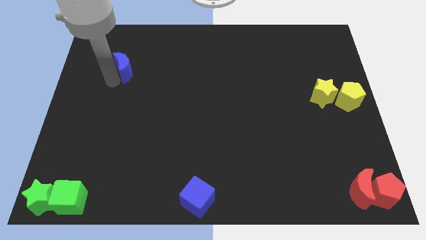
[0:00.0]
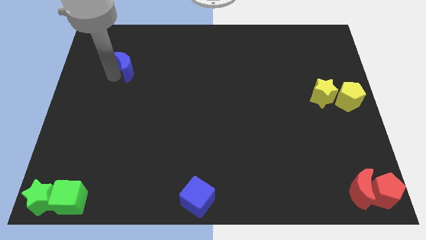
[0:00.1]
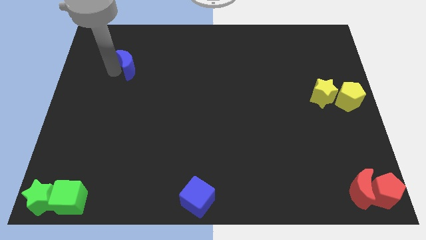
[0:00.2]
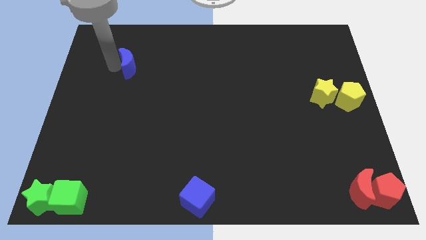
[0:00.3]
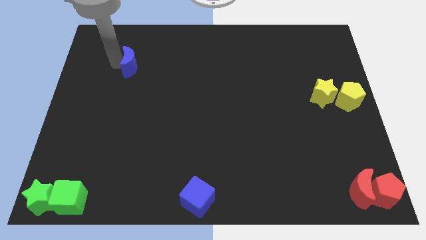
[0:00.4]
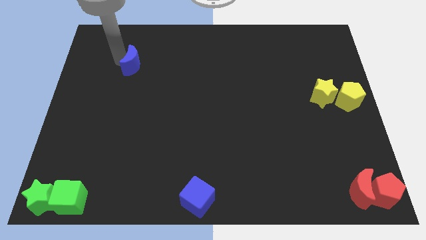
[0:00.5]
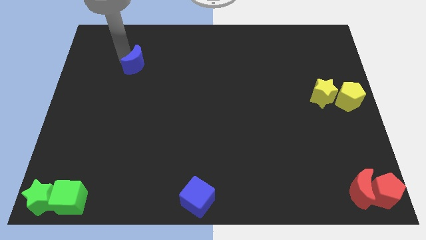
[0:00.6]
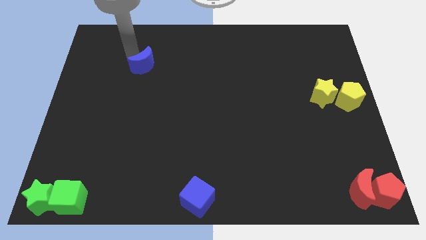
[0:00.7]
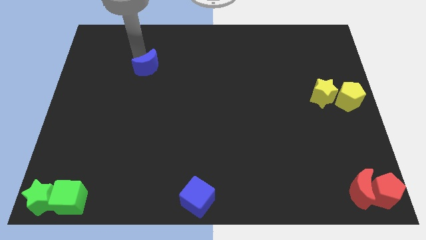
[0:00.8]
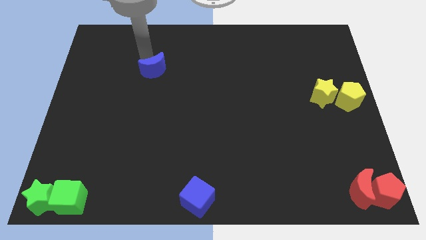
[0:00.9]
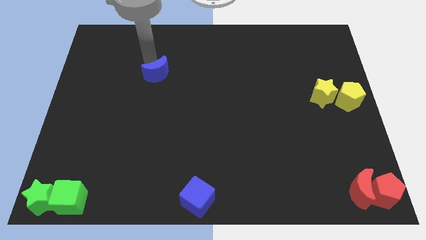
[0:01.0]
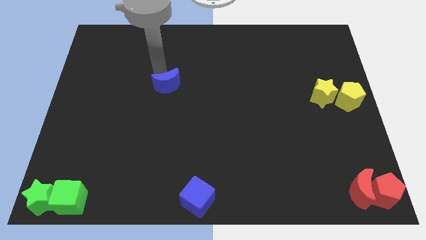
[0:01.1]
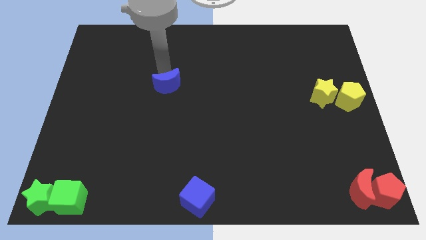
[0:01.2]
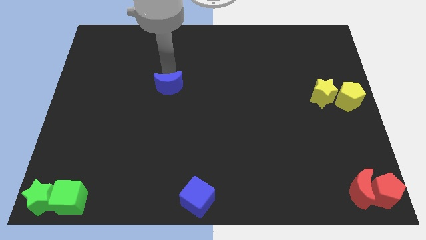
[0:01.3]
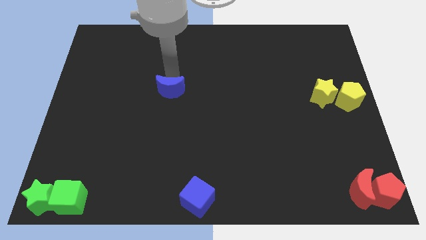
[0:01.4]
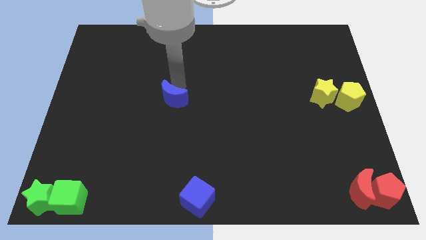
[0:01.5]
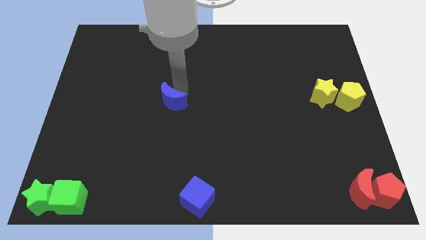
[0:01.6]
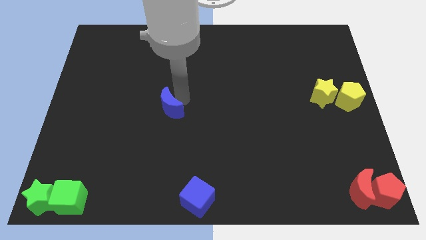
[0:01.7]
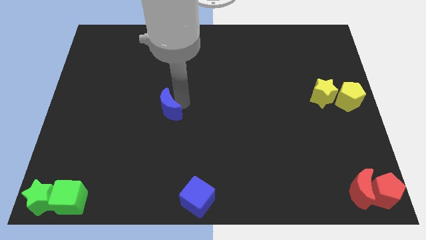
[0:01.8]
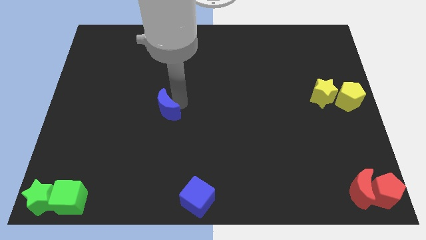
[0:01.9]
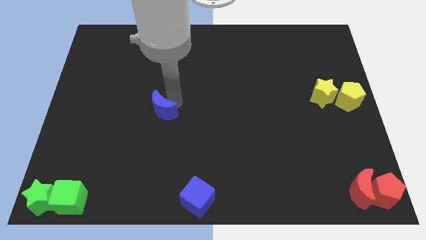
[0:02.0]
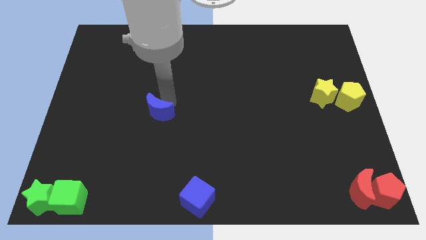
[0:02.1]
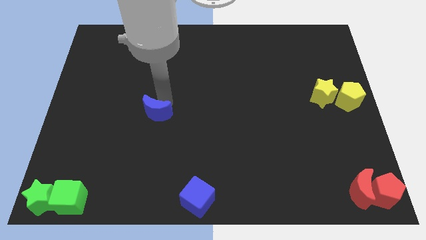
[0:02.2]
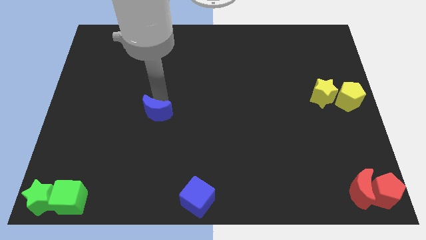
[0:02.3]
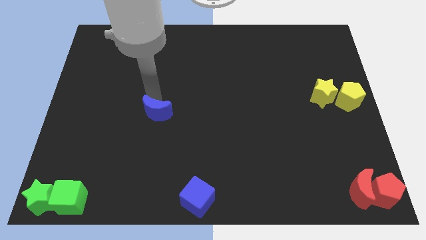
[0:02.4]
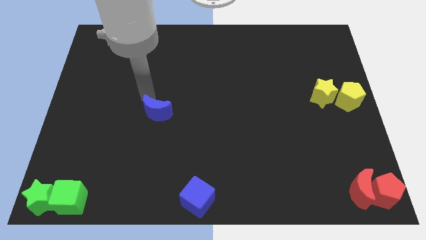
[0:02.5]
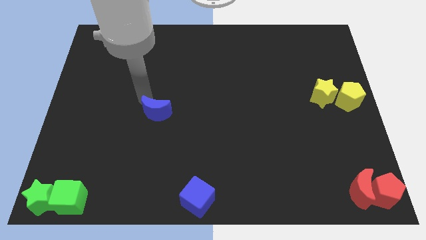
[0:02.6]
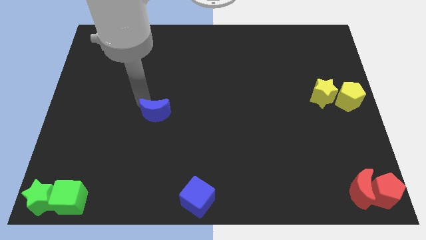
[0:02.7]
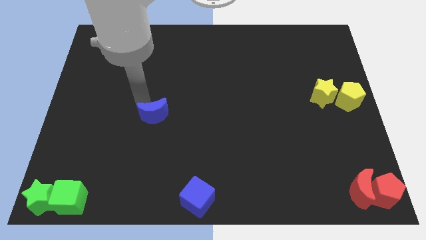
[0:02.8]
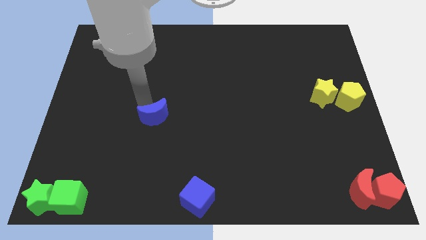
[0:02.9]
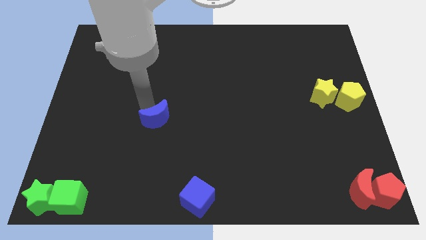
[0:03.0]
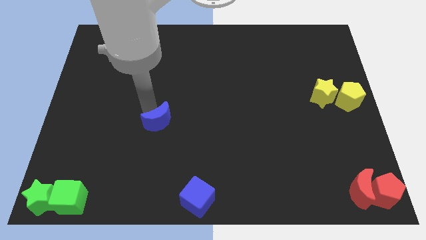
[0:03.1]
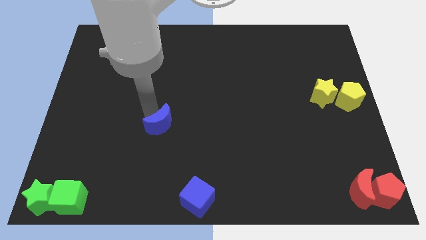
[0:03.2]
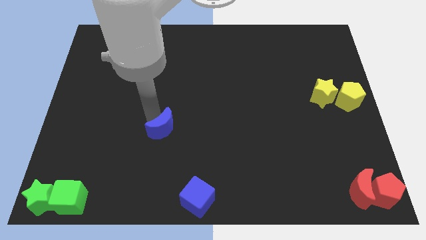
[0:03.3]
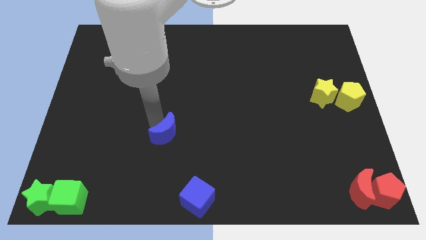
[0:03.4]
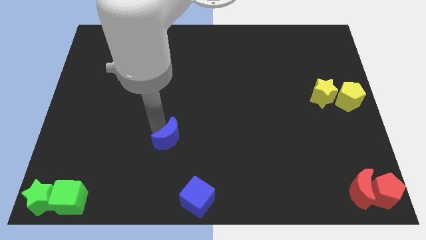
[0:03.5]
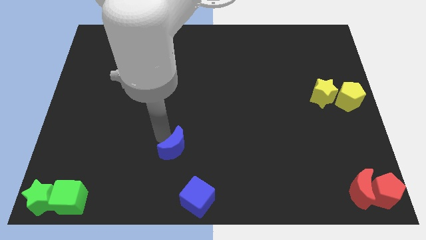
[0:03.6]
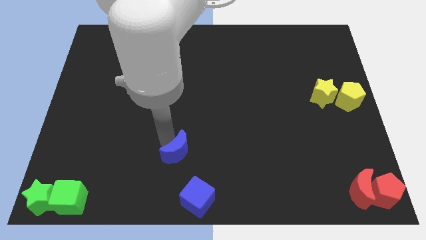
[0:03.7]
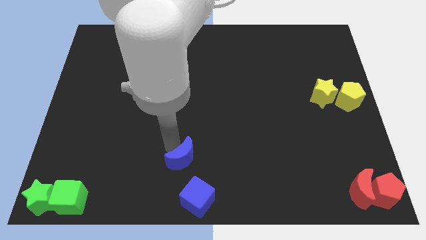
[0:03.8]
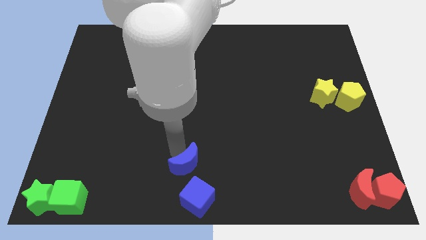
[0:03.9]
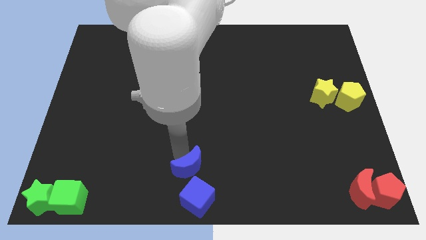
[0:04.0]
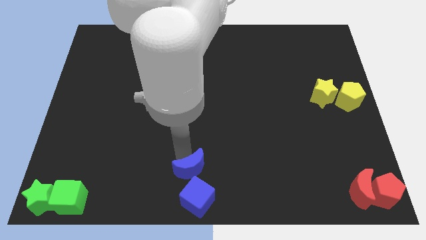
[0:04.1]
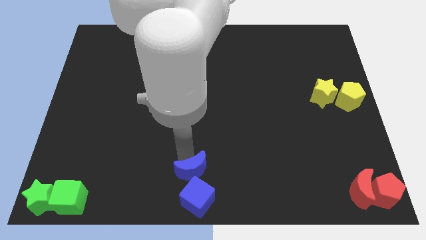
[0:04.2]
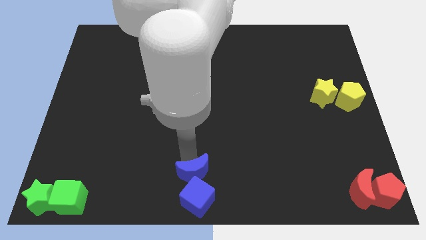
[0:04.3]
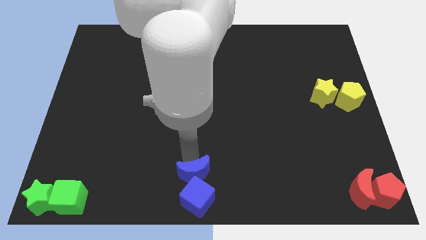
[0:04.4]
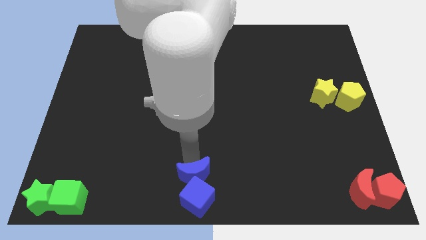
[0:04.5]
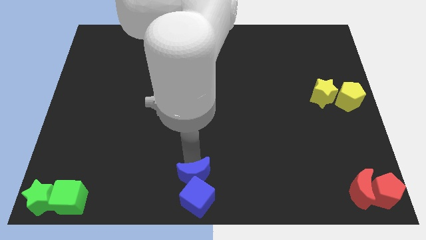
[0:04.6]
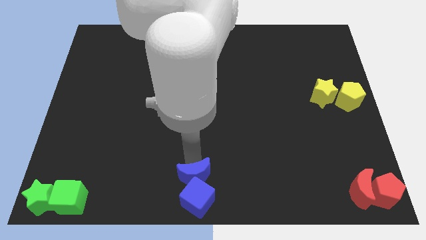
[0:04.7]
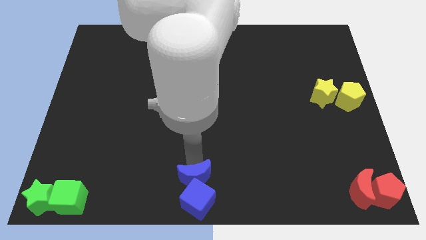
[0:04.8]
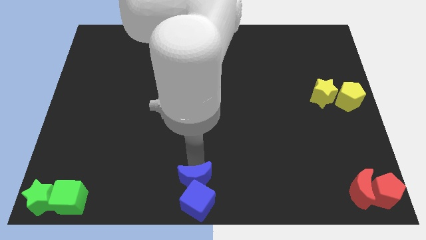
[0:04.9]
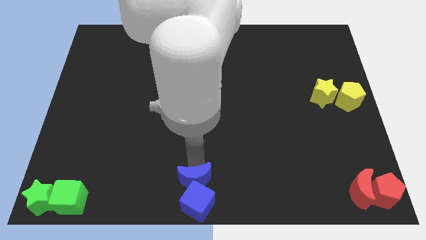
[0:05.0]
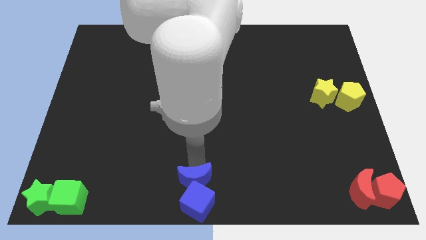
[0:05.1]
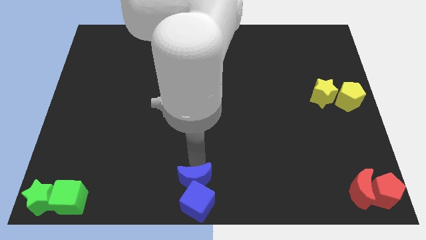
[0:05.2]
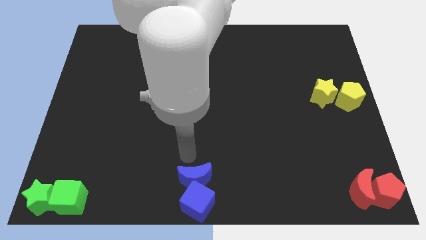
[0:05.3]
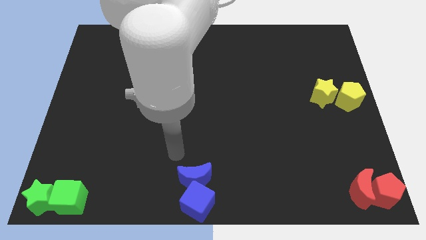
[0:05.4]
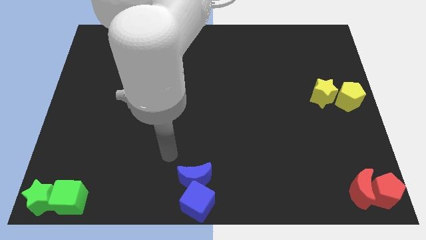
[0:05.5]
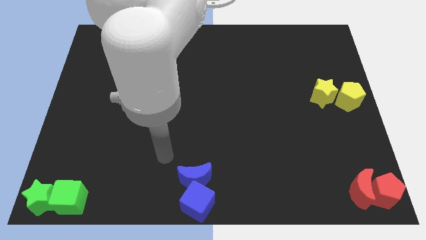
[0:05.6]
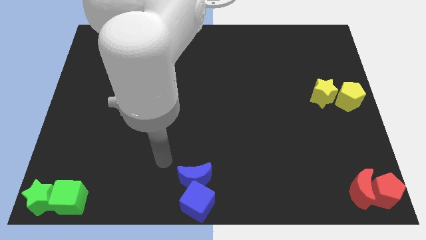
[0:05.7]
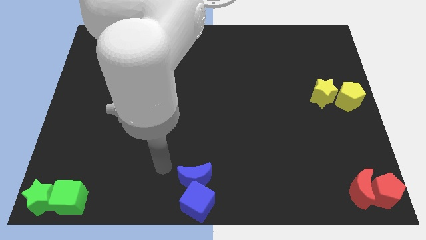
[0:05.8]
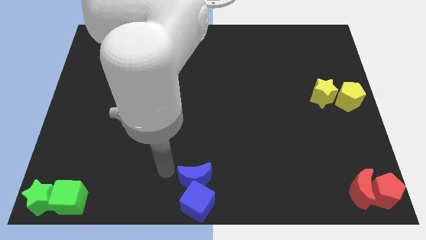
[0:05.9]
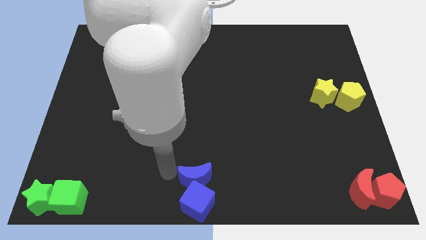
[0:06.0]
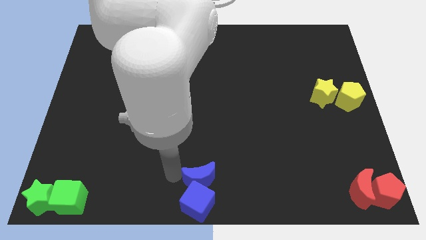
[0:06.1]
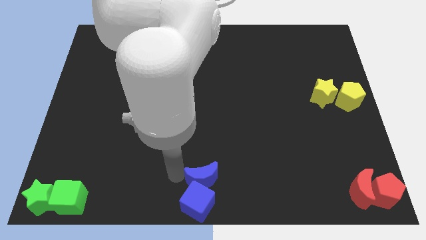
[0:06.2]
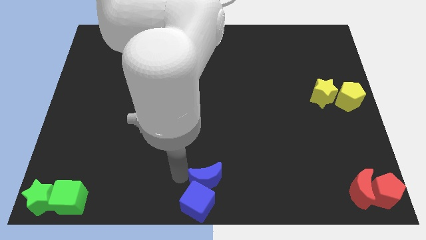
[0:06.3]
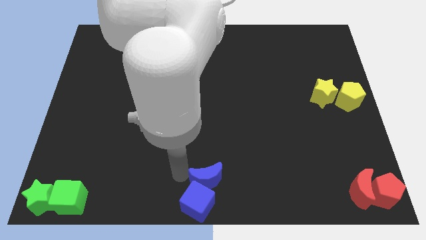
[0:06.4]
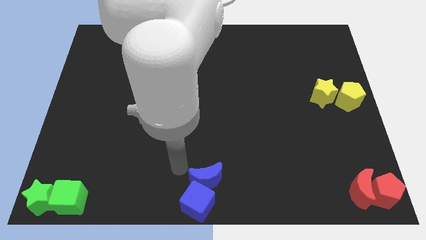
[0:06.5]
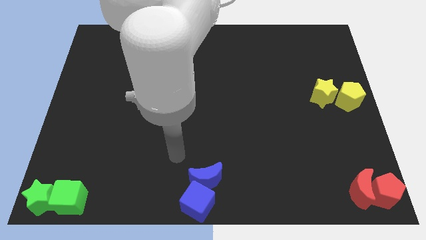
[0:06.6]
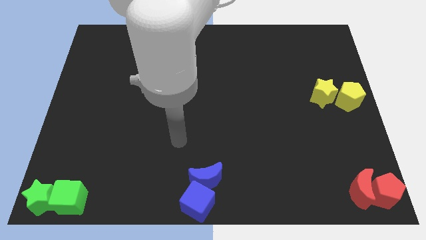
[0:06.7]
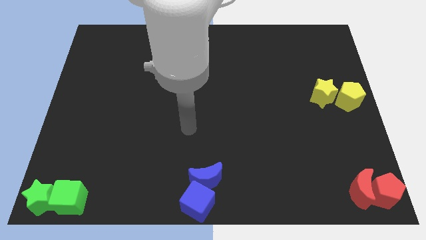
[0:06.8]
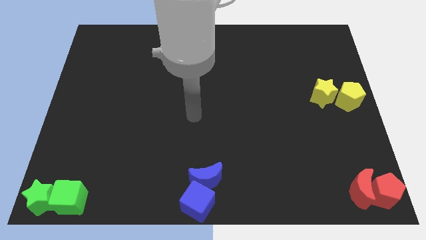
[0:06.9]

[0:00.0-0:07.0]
place the blue crescent above the blue cube

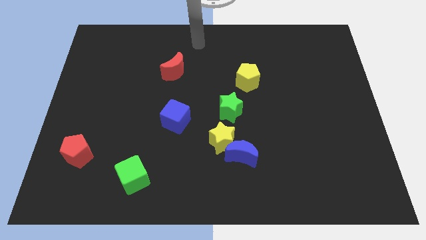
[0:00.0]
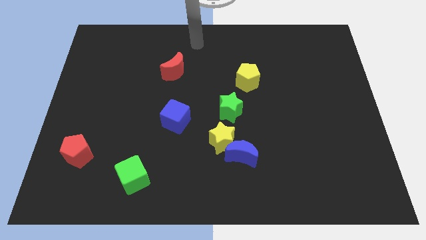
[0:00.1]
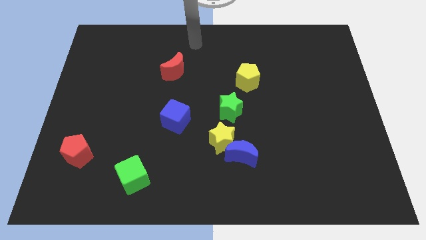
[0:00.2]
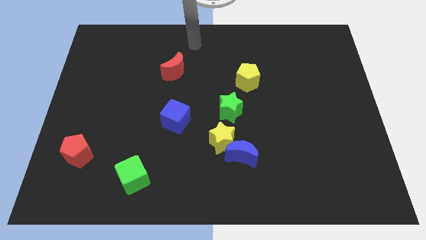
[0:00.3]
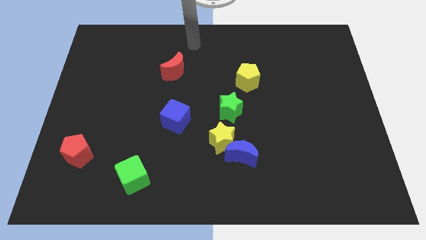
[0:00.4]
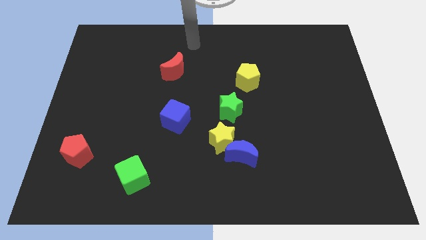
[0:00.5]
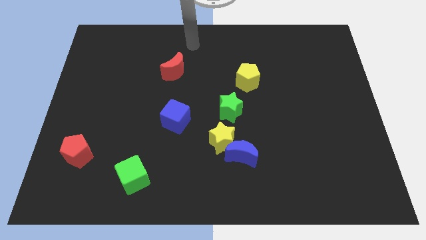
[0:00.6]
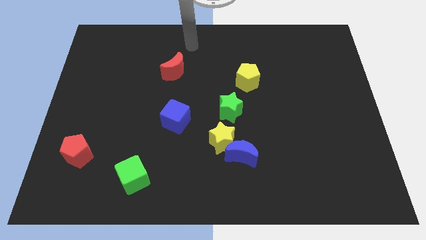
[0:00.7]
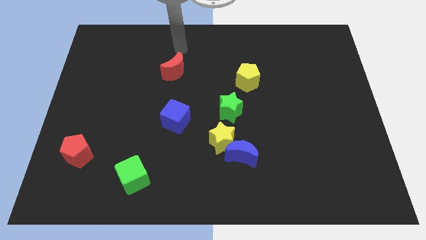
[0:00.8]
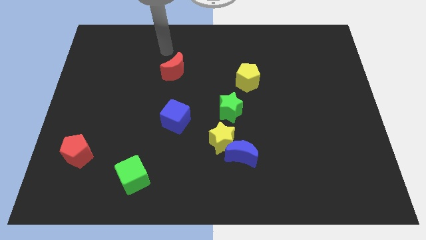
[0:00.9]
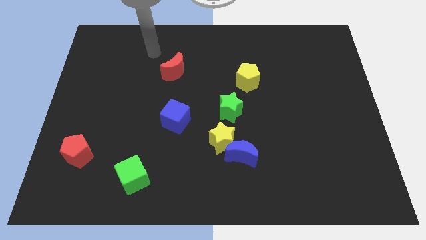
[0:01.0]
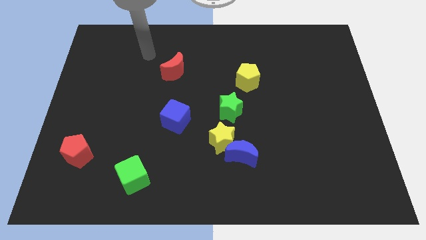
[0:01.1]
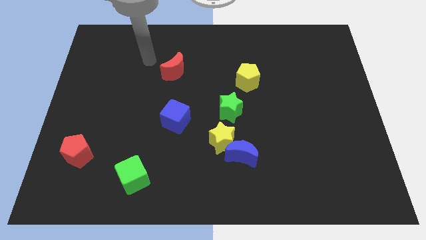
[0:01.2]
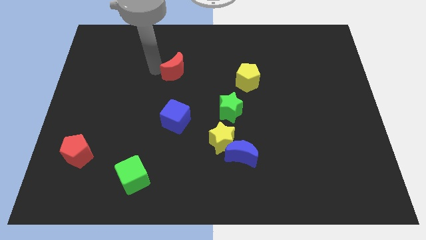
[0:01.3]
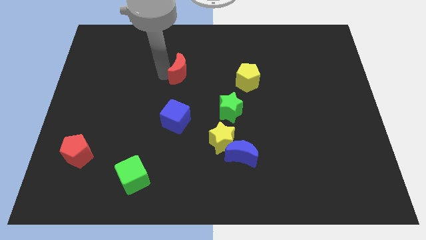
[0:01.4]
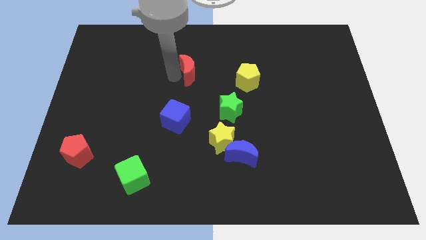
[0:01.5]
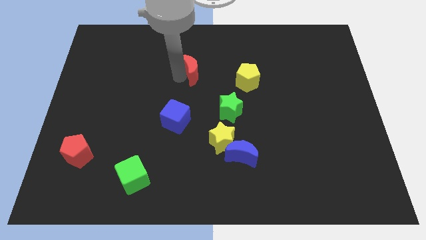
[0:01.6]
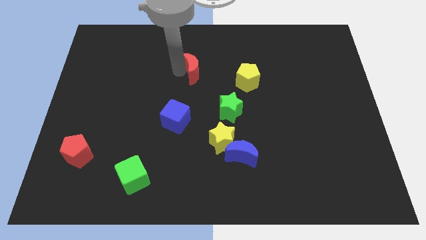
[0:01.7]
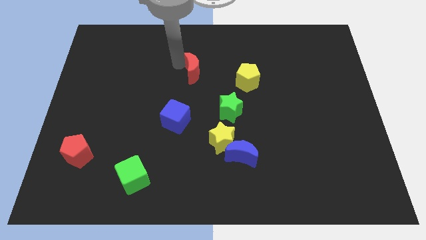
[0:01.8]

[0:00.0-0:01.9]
push the red crescent towards the yellow pentagon

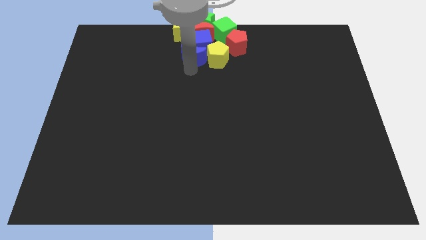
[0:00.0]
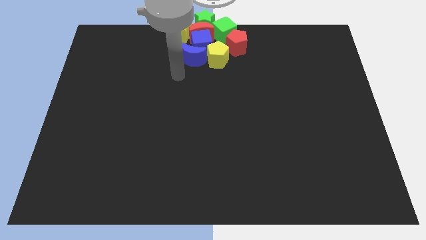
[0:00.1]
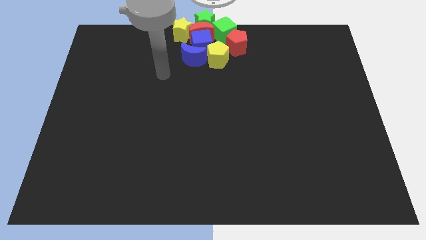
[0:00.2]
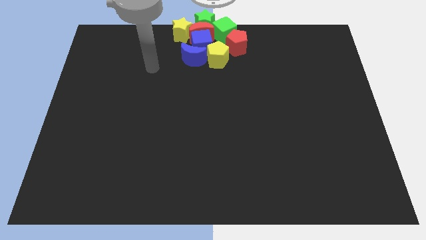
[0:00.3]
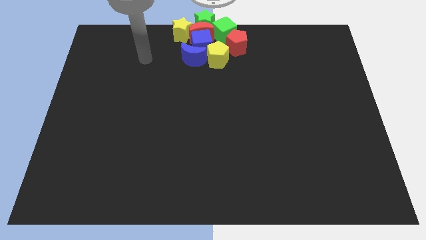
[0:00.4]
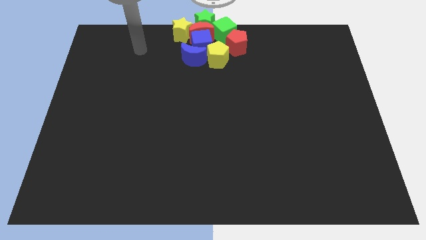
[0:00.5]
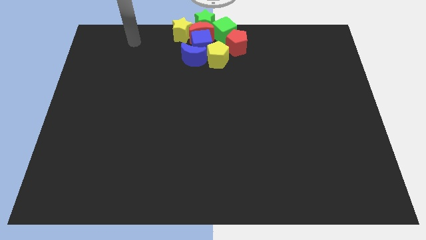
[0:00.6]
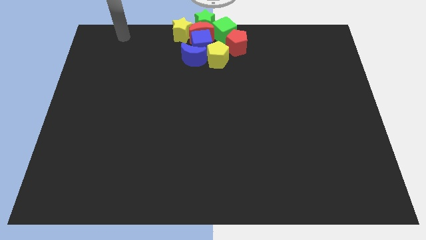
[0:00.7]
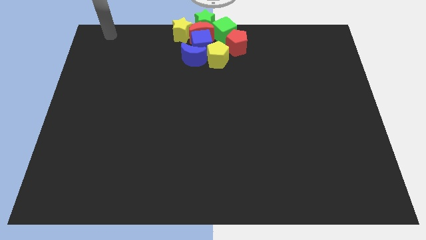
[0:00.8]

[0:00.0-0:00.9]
move your arm away from blue moon
